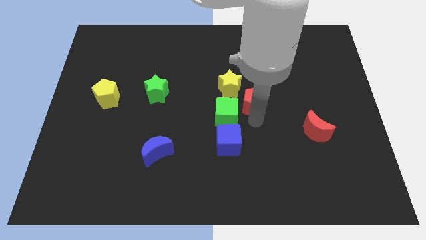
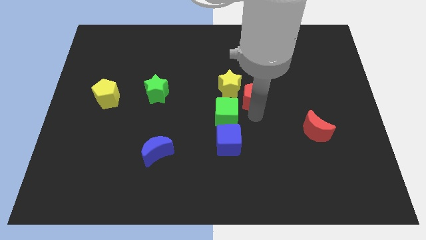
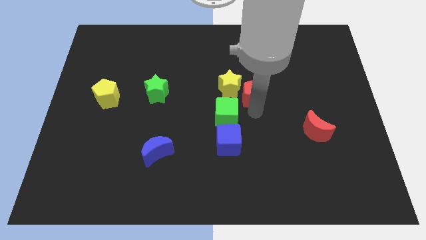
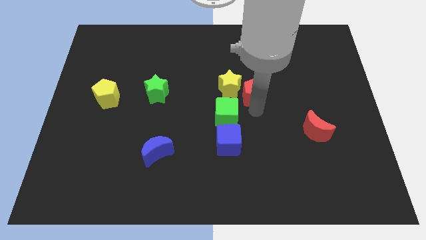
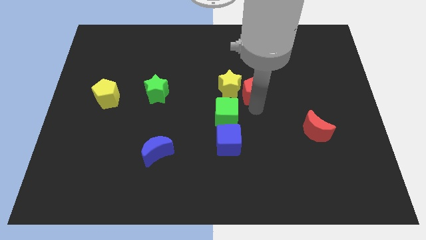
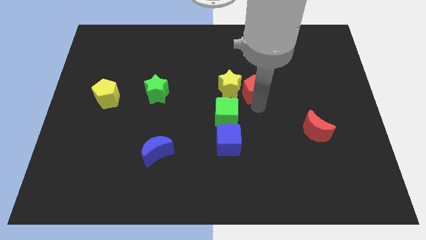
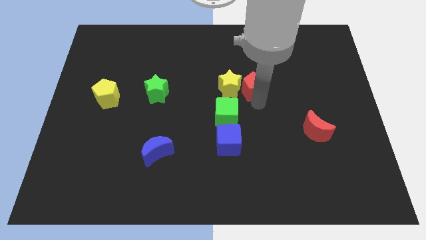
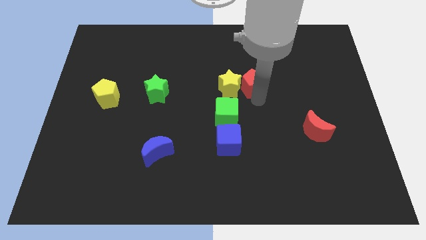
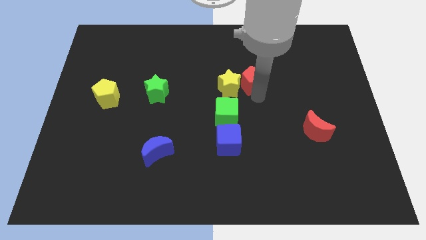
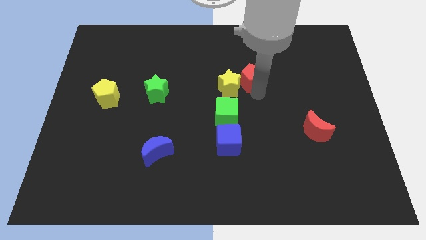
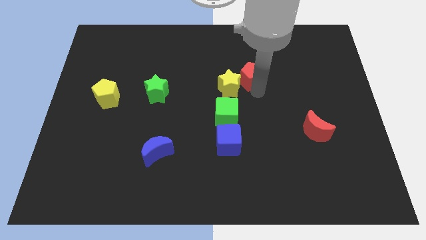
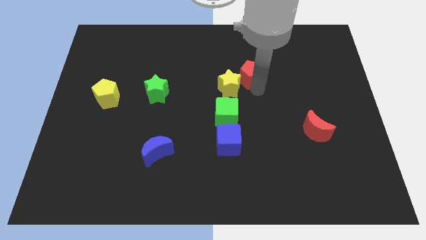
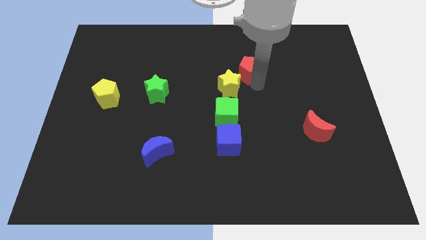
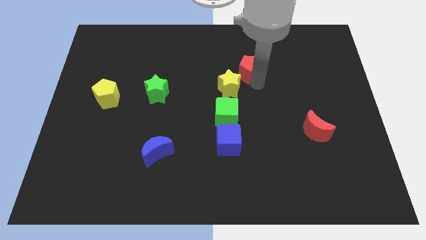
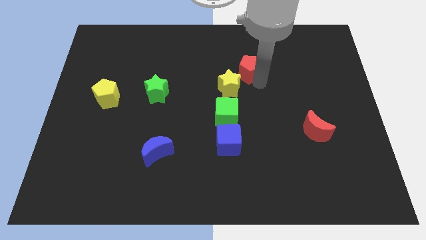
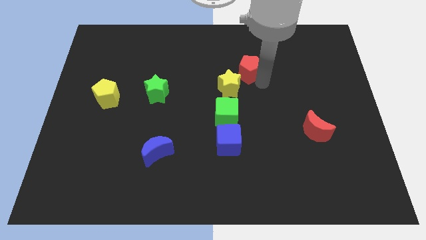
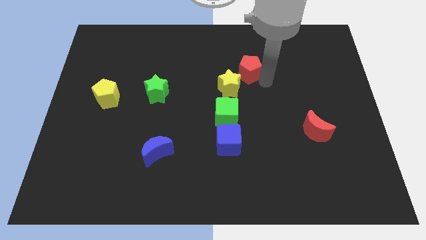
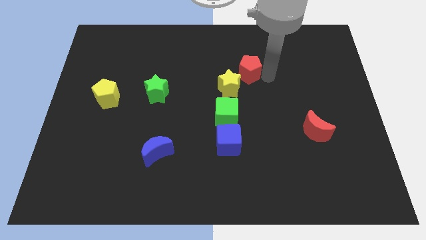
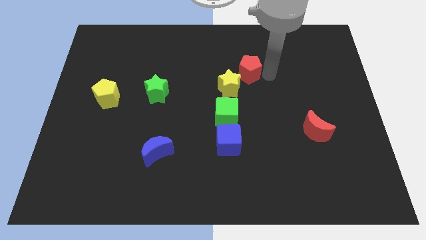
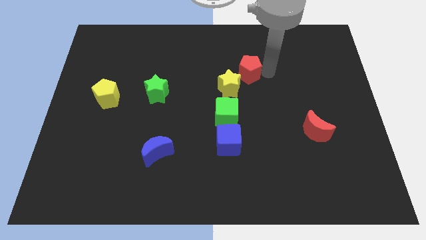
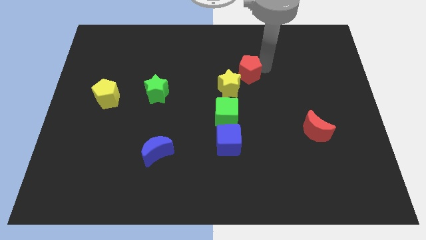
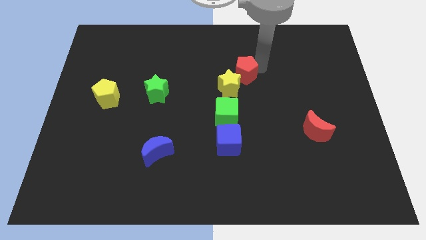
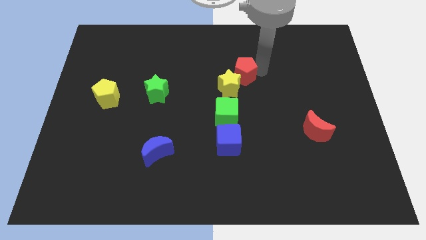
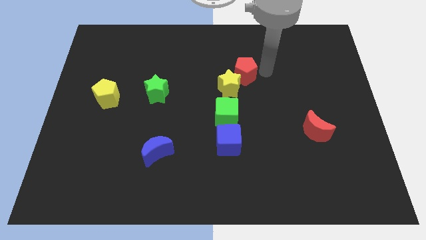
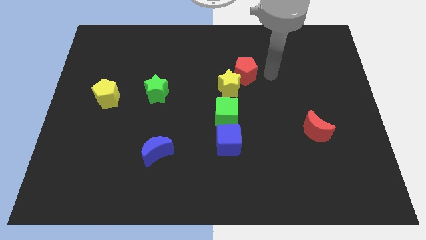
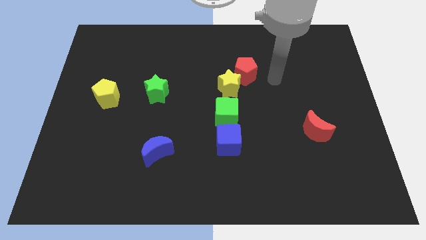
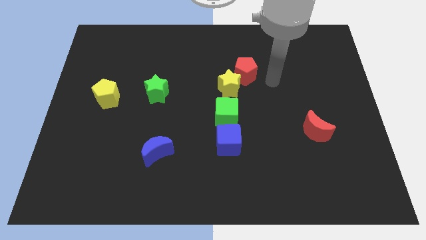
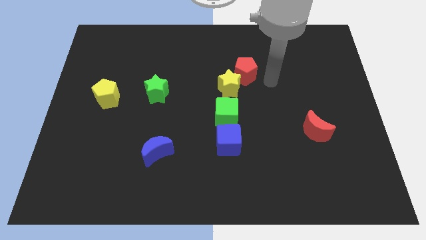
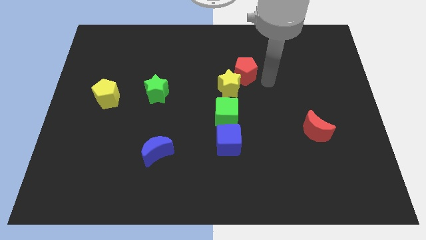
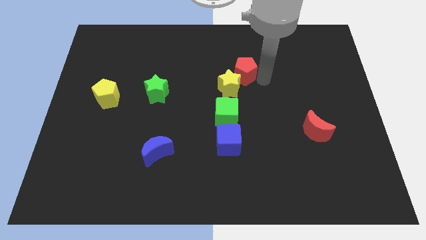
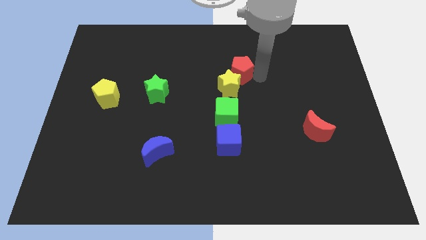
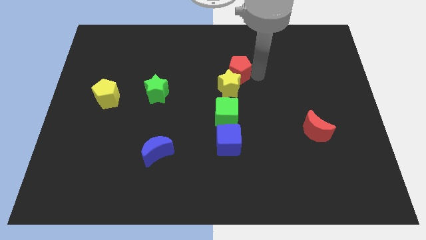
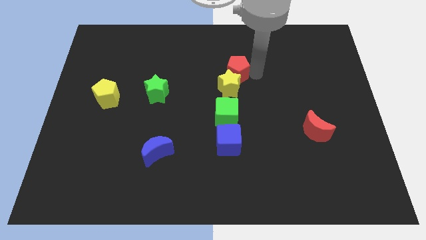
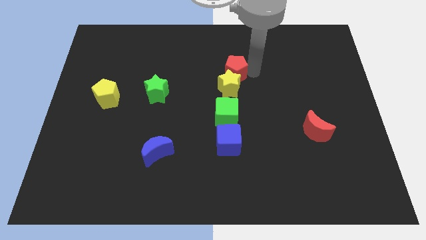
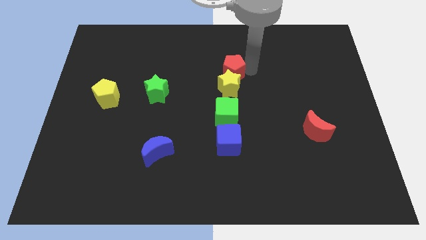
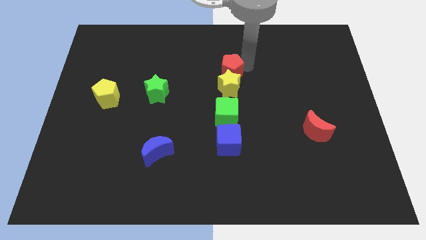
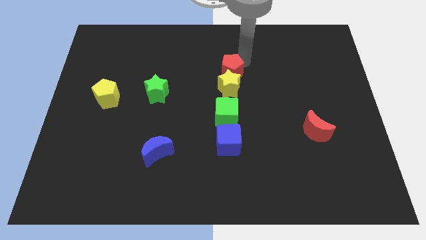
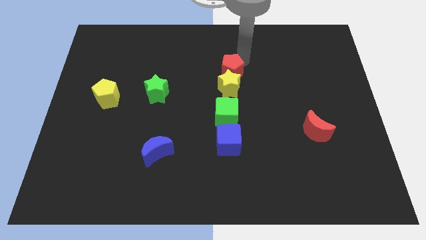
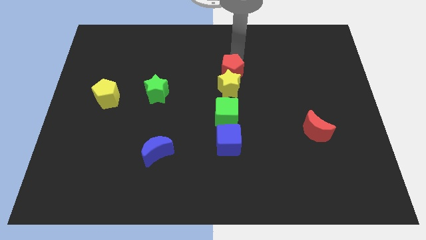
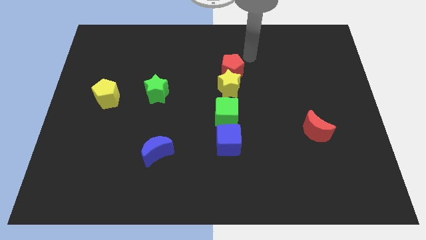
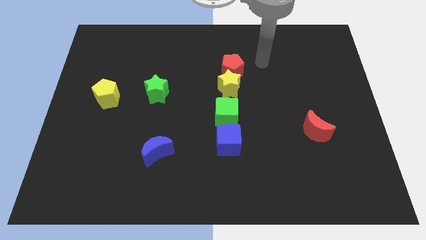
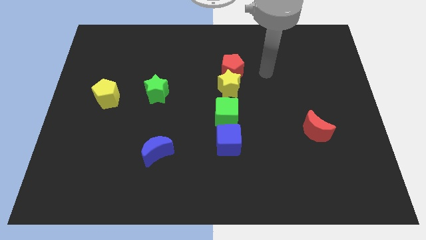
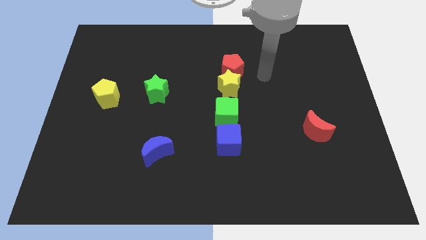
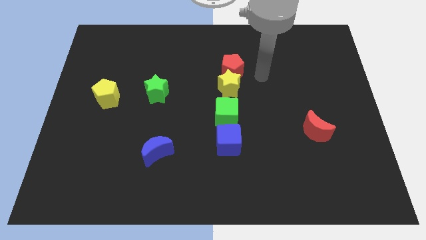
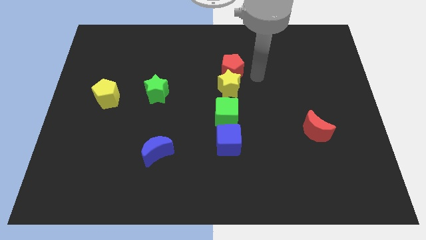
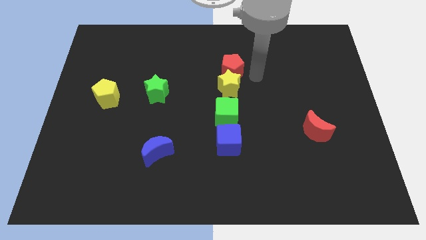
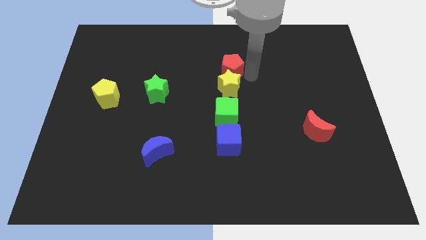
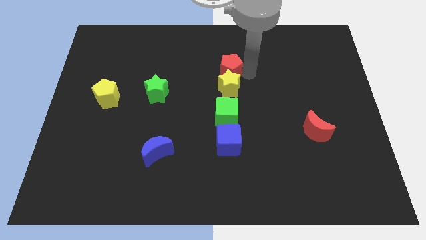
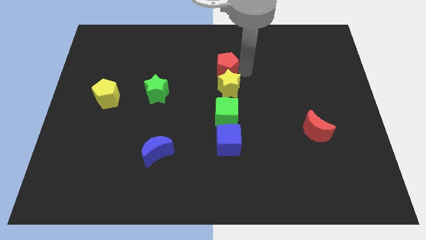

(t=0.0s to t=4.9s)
place red pentagon above yellow star

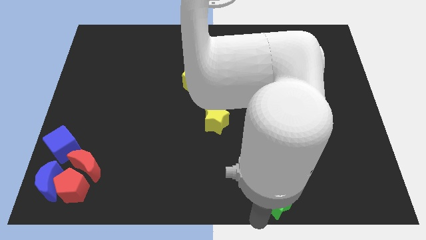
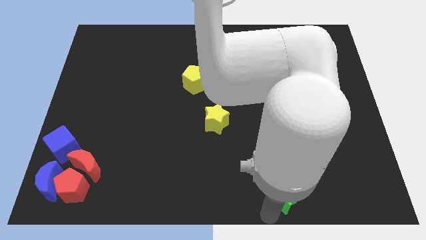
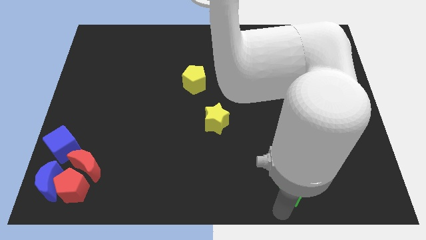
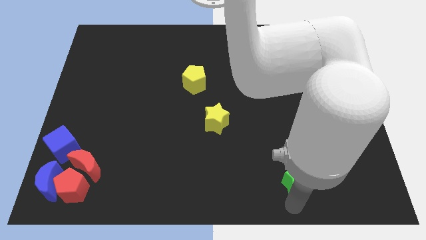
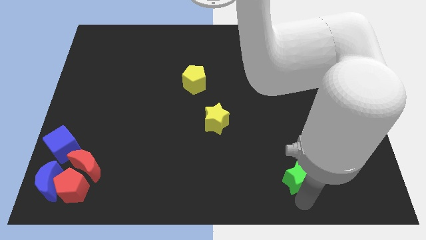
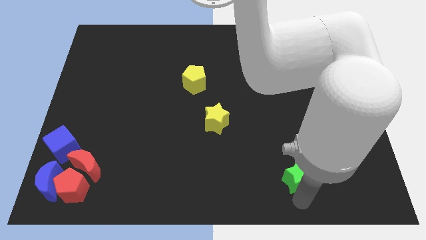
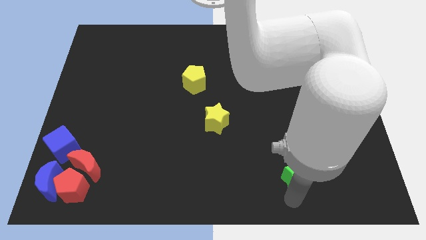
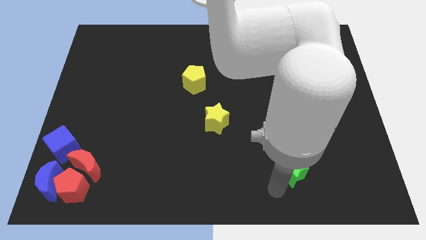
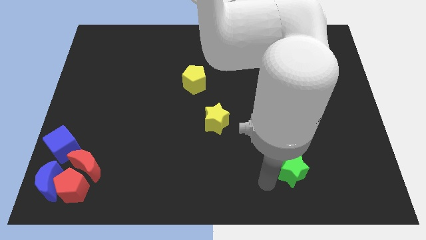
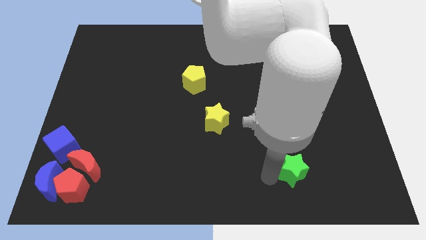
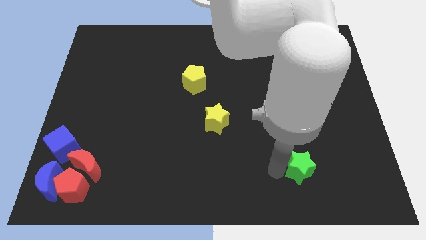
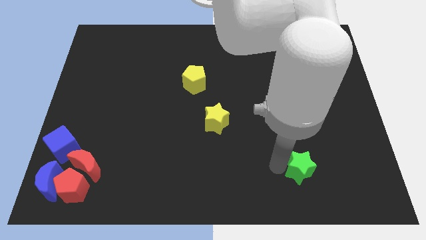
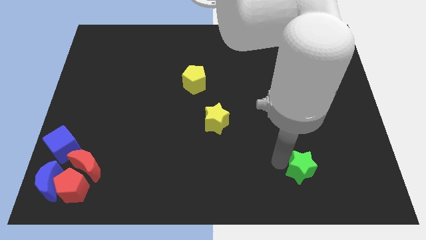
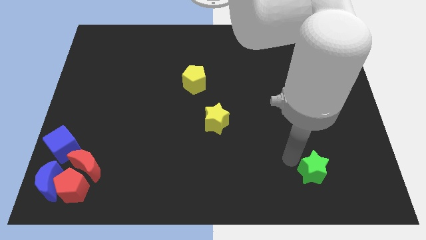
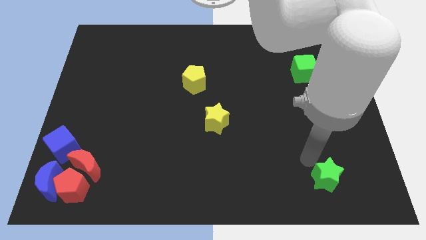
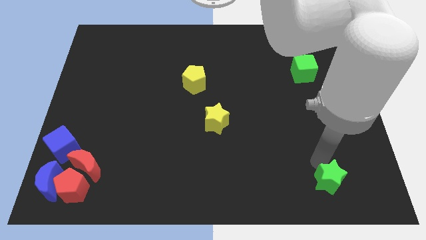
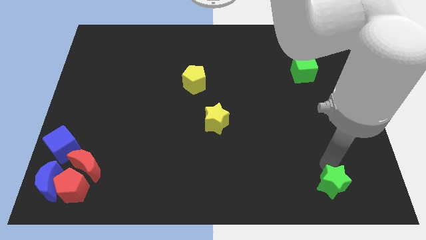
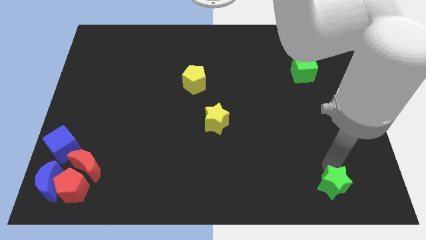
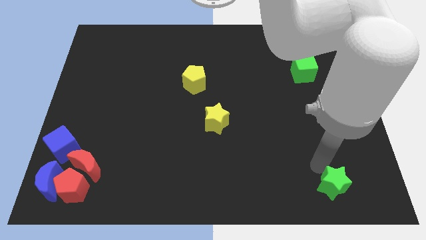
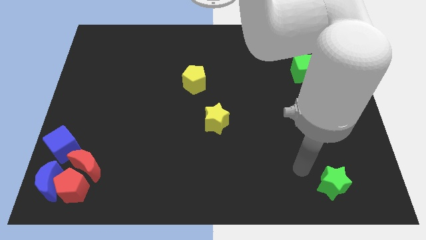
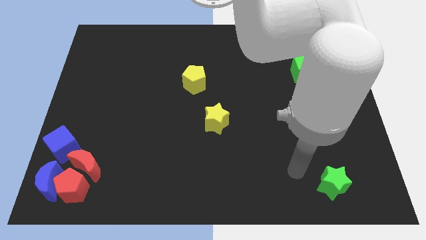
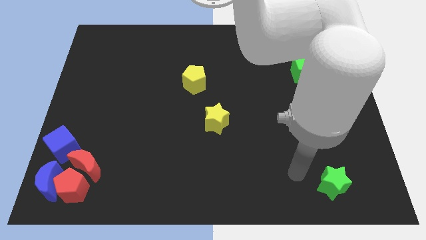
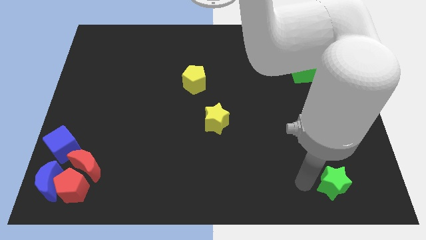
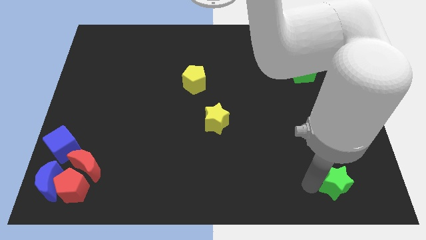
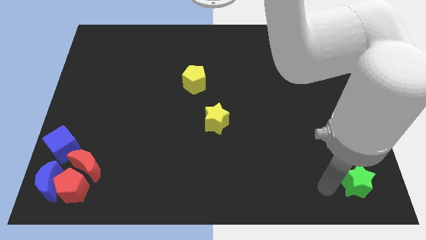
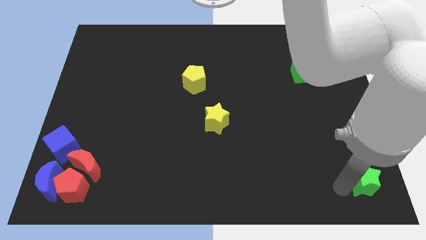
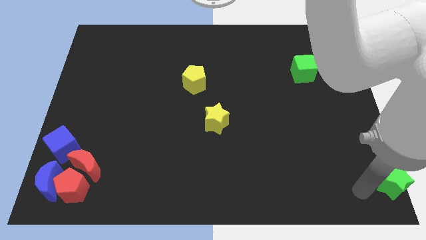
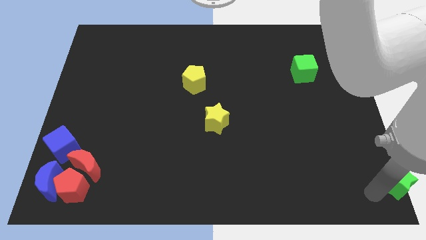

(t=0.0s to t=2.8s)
move green star to bottom right

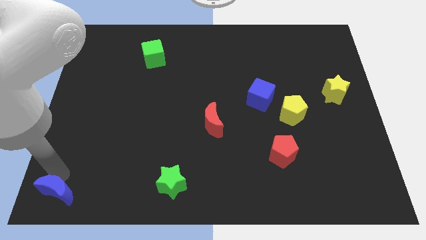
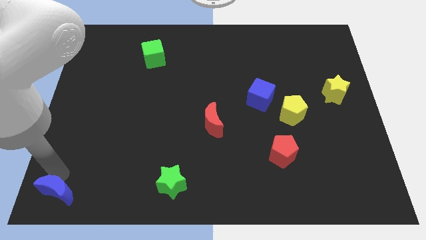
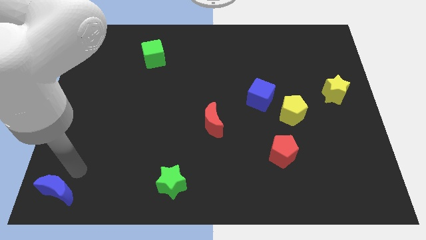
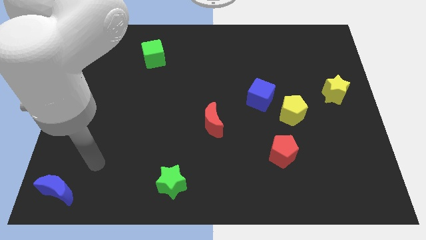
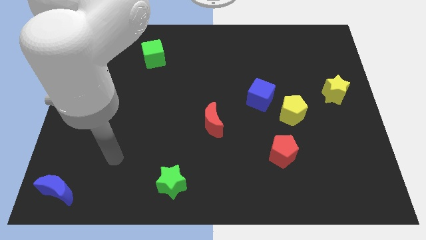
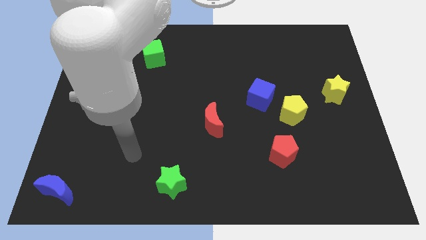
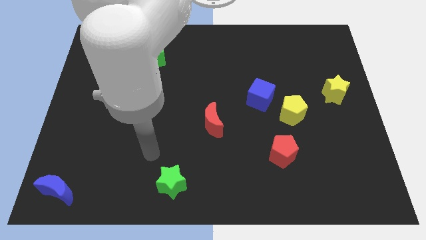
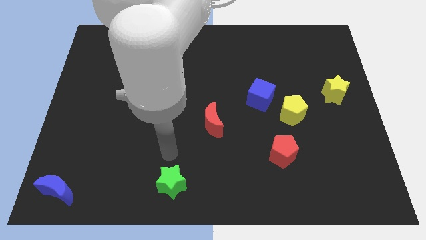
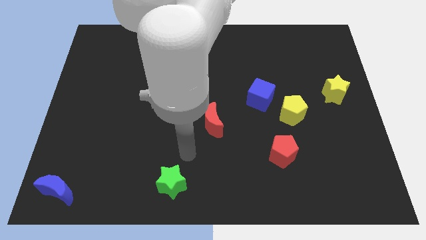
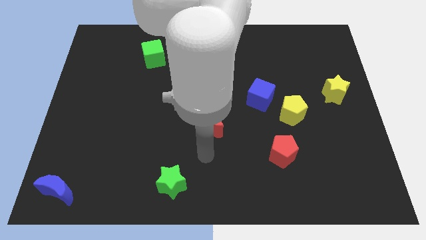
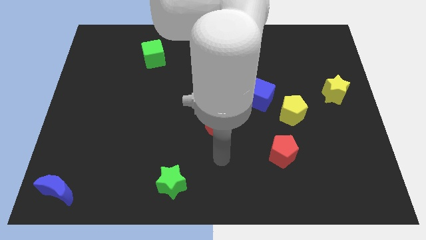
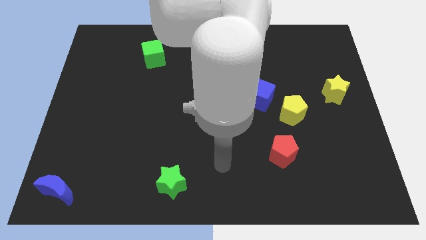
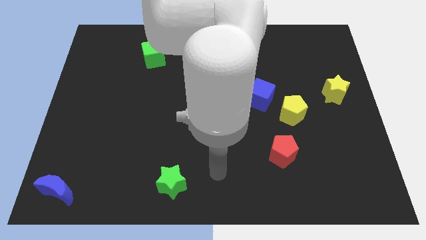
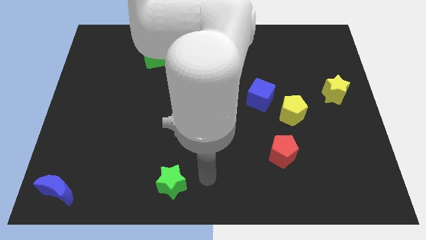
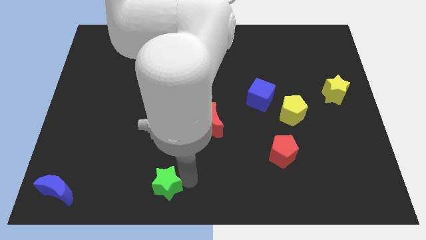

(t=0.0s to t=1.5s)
move your arm away from the blue moon
